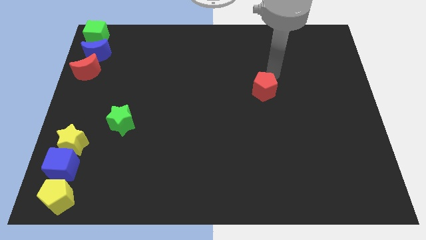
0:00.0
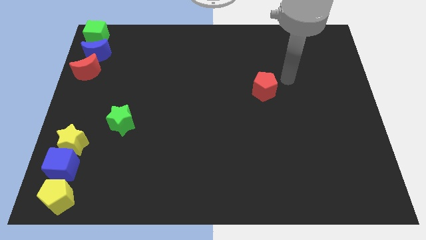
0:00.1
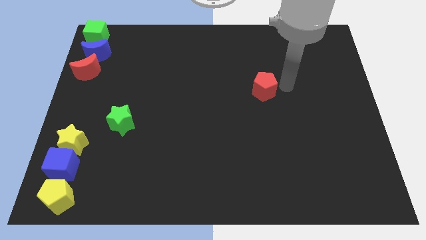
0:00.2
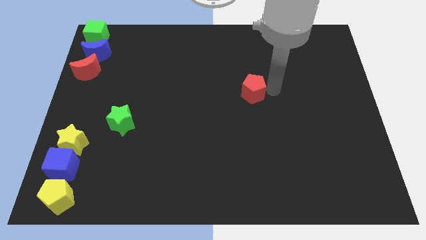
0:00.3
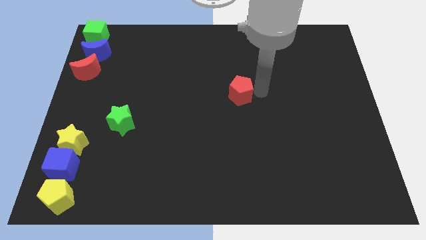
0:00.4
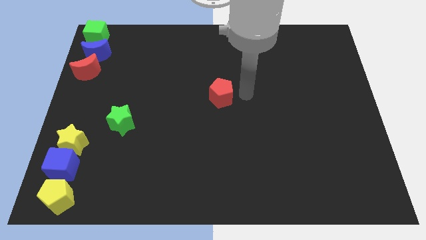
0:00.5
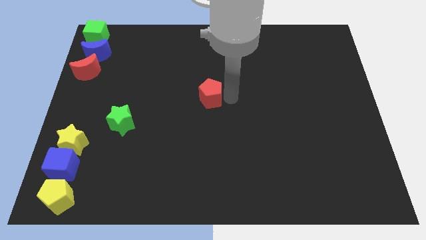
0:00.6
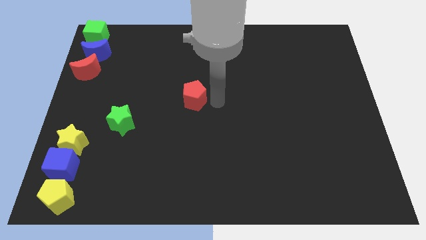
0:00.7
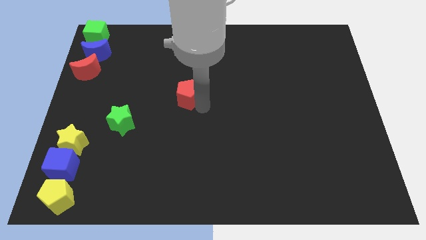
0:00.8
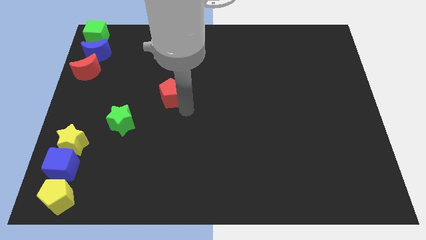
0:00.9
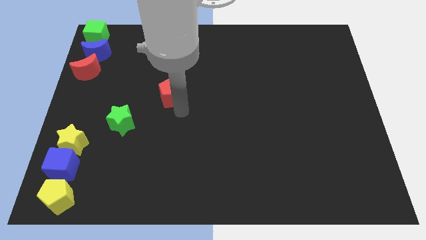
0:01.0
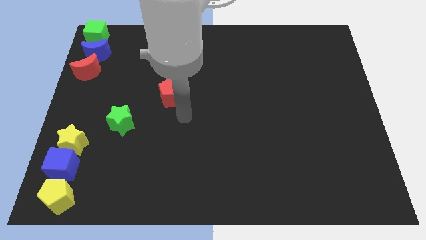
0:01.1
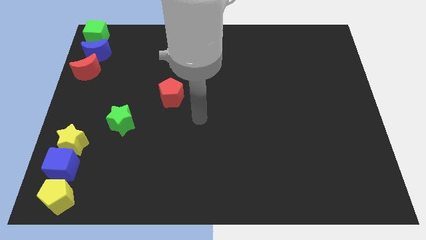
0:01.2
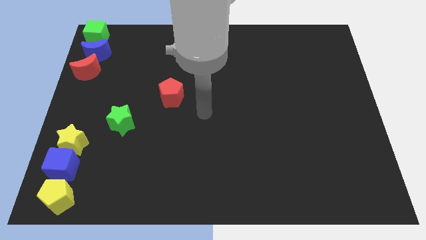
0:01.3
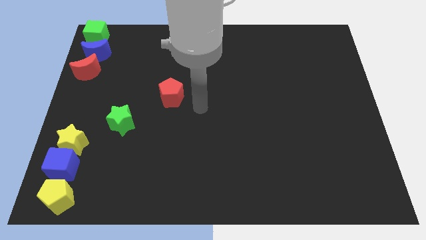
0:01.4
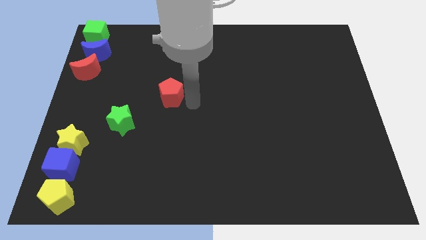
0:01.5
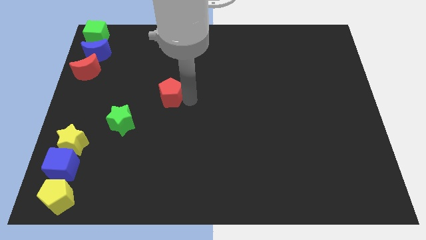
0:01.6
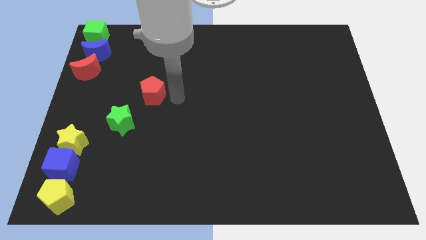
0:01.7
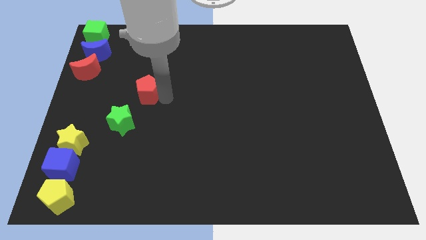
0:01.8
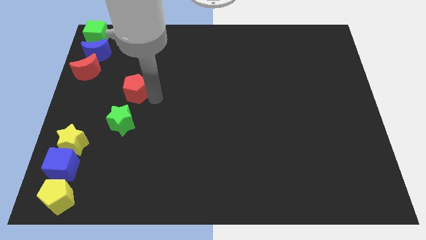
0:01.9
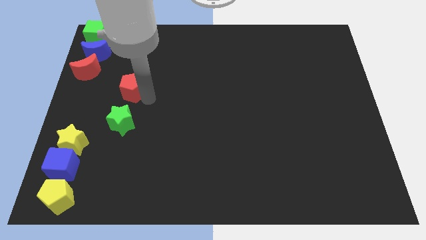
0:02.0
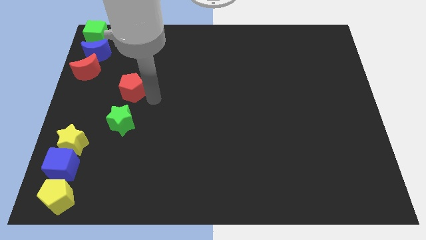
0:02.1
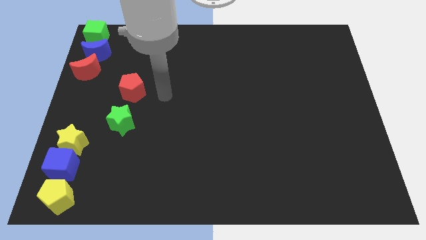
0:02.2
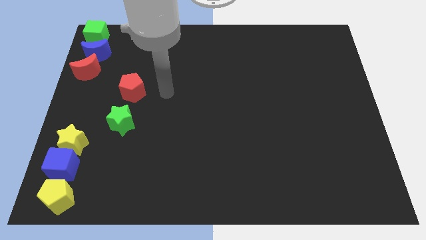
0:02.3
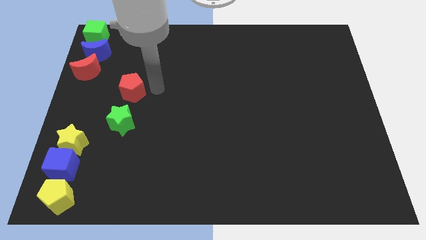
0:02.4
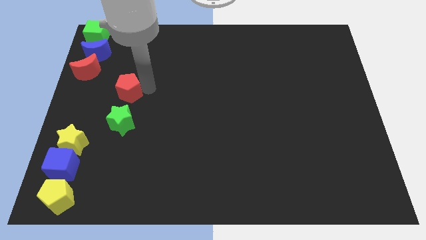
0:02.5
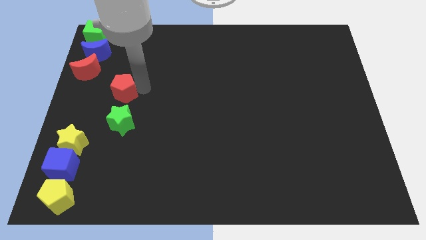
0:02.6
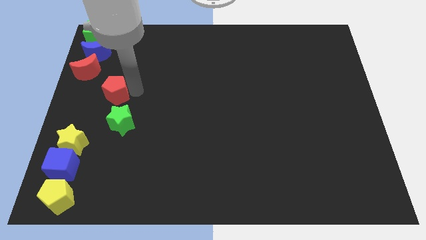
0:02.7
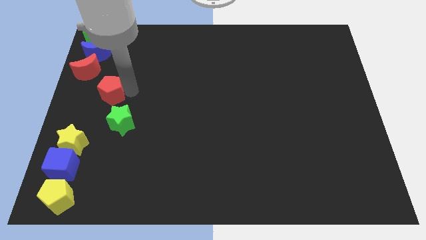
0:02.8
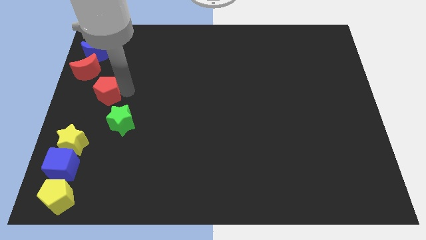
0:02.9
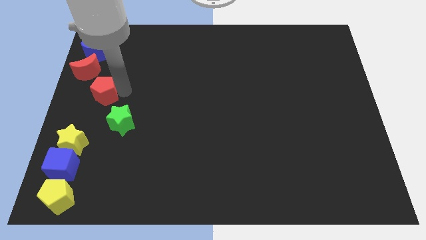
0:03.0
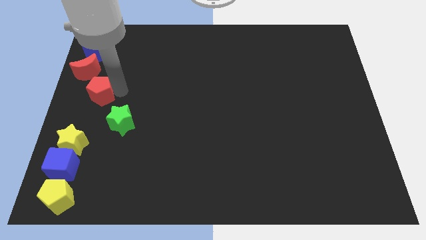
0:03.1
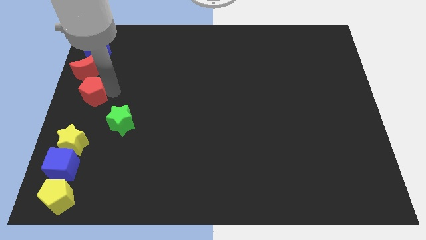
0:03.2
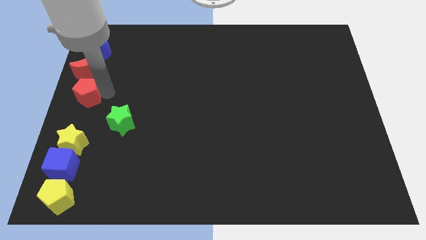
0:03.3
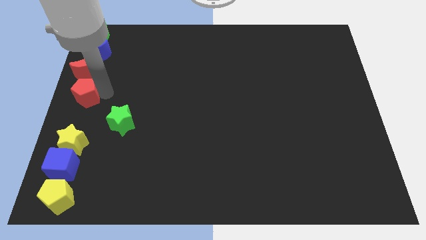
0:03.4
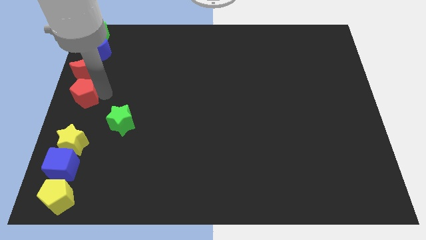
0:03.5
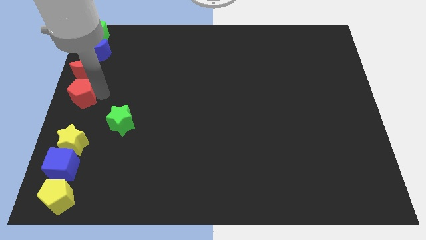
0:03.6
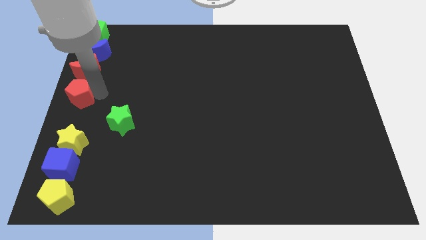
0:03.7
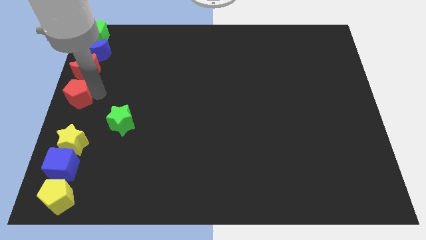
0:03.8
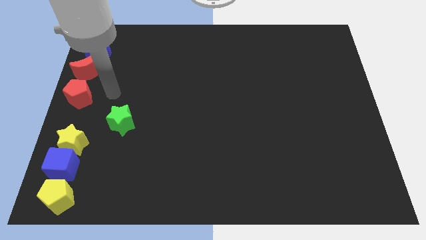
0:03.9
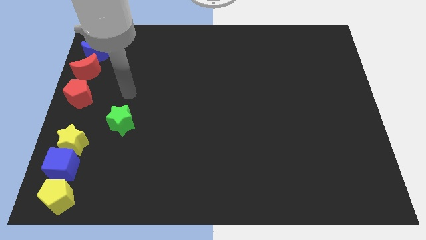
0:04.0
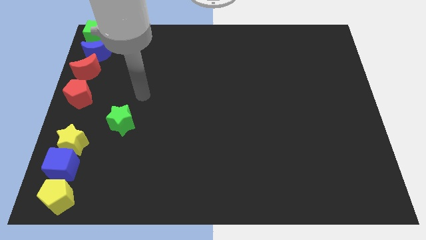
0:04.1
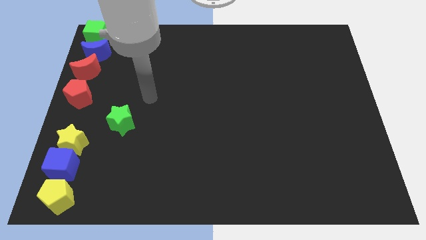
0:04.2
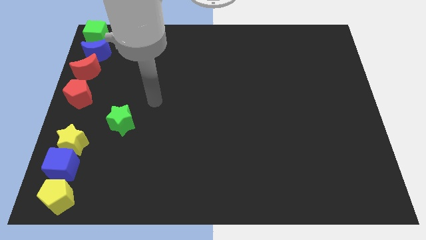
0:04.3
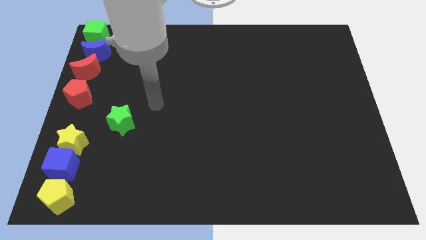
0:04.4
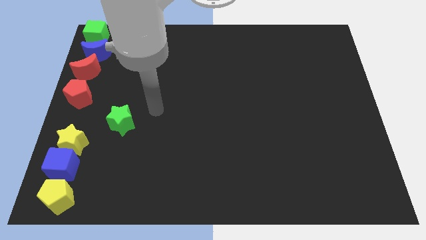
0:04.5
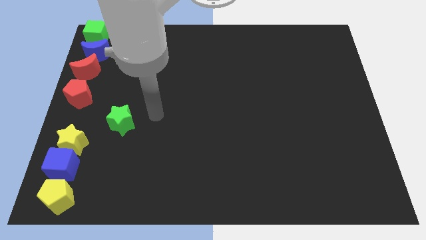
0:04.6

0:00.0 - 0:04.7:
move the red pentagon below the red moon

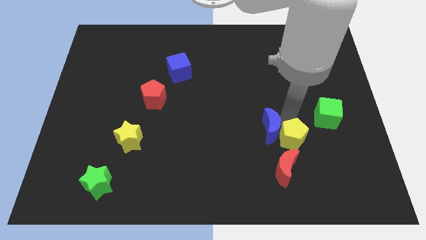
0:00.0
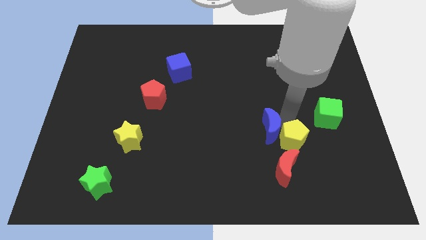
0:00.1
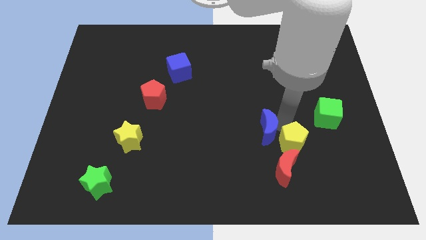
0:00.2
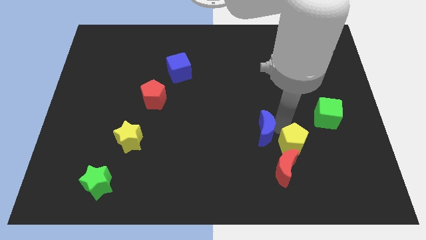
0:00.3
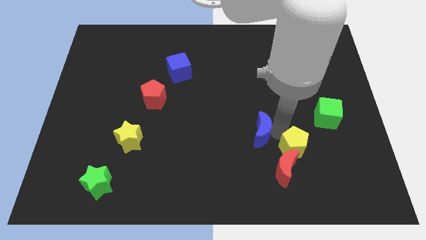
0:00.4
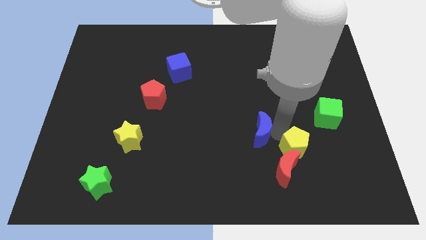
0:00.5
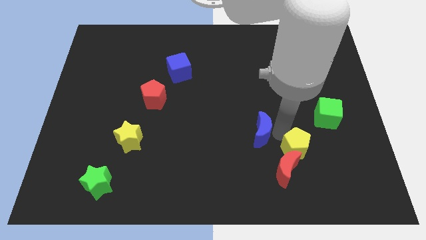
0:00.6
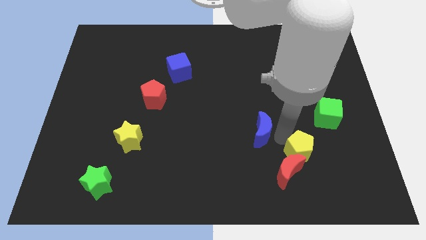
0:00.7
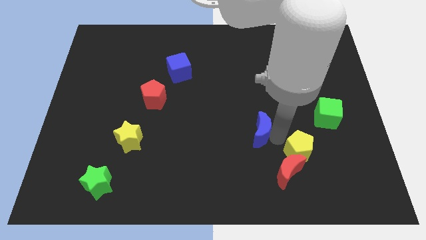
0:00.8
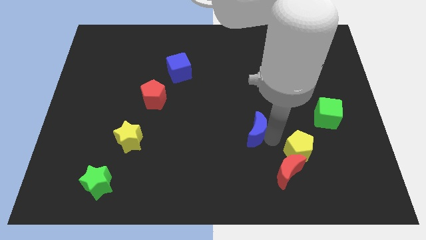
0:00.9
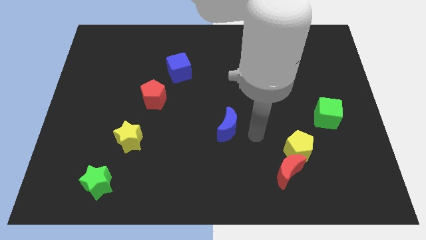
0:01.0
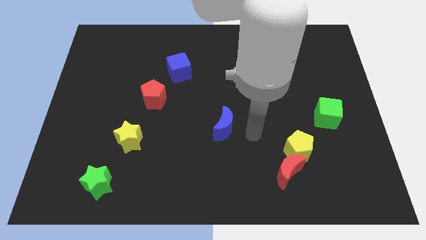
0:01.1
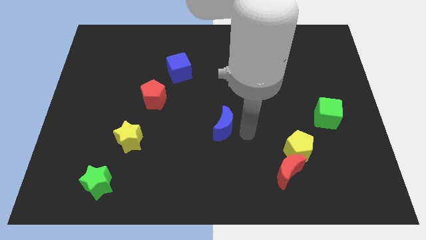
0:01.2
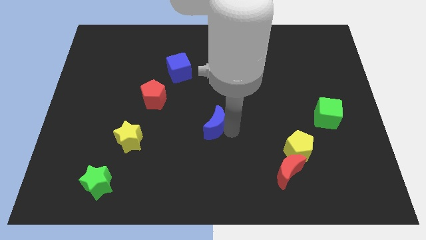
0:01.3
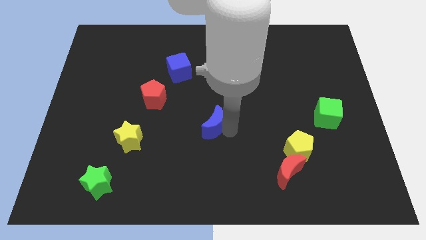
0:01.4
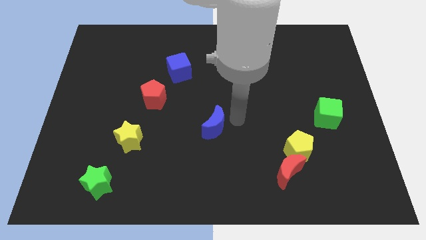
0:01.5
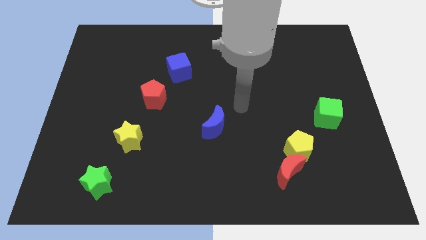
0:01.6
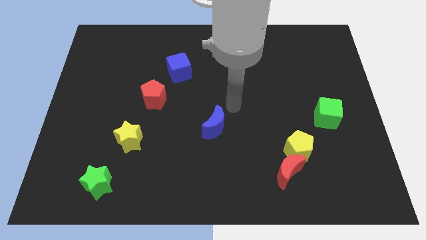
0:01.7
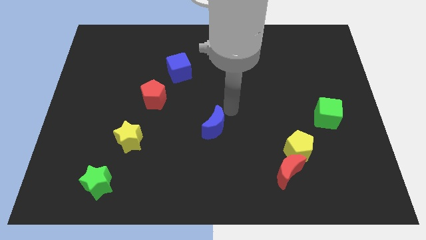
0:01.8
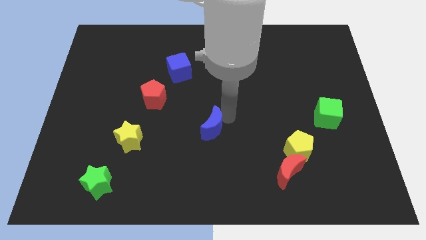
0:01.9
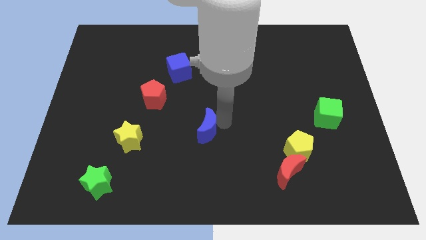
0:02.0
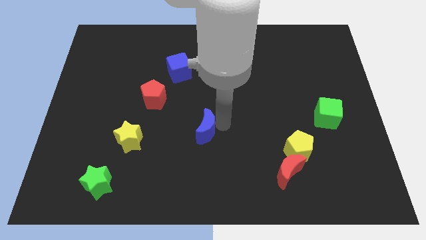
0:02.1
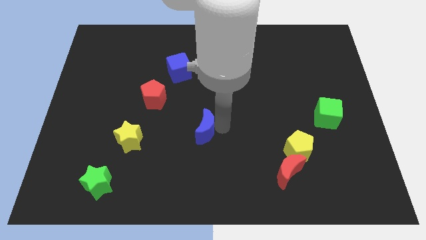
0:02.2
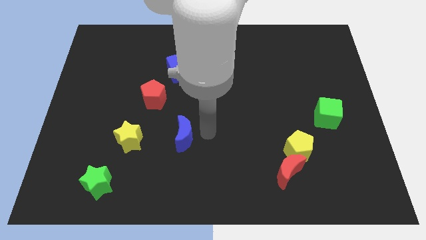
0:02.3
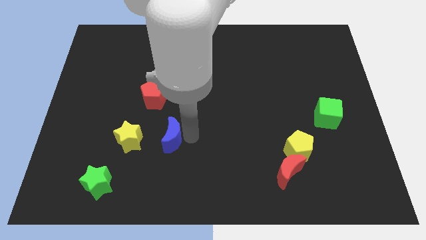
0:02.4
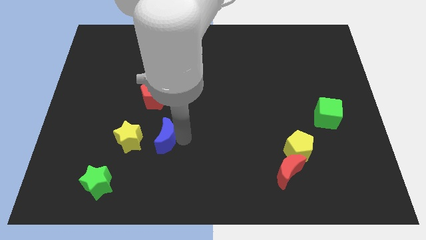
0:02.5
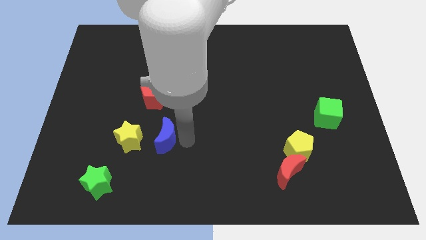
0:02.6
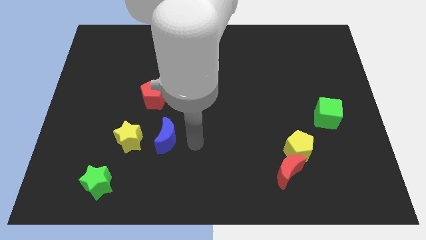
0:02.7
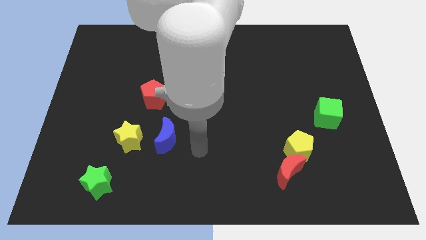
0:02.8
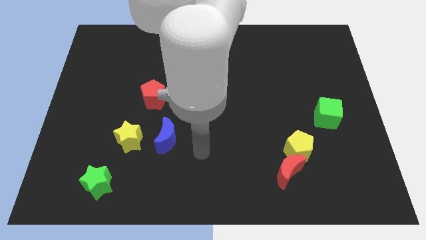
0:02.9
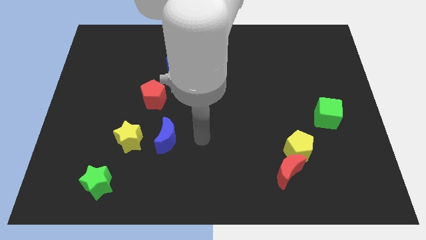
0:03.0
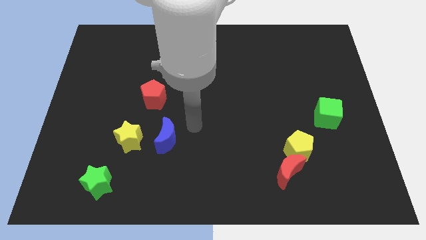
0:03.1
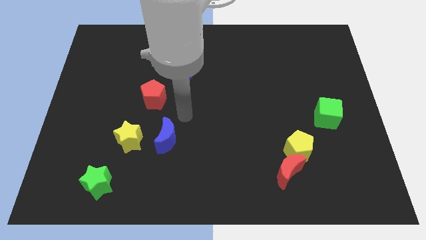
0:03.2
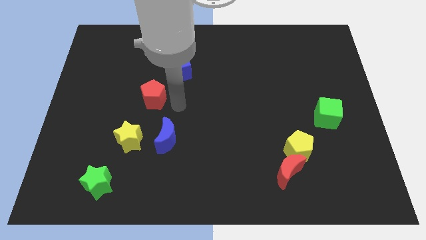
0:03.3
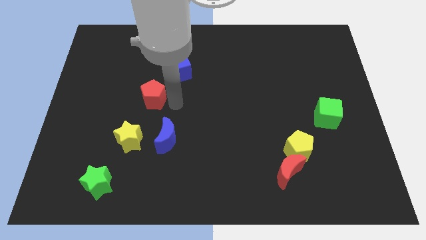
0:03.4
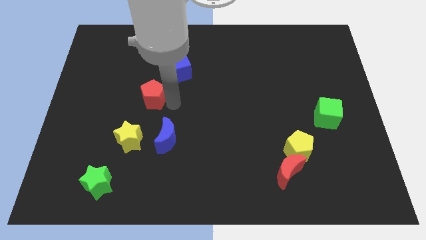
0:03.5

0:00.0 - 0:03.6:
push the blue moon to the right of the yellow star

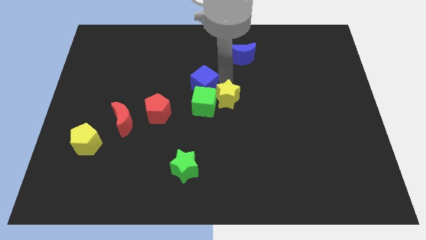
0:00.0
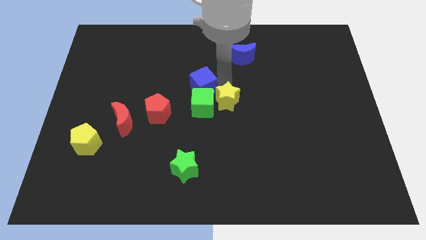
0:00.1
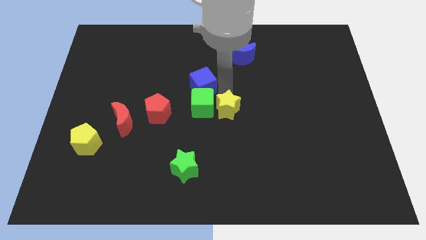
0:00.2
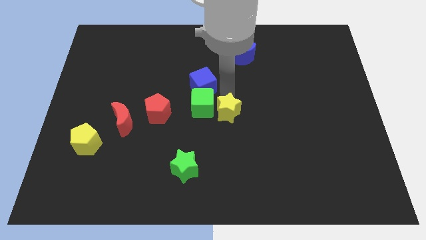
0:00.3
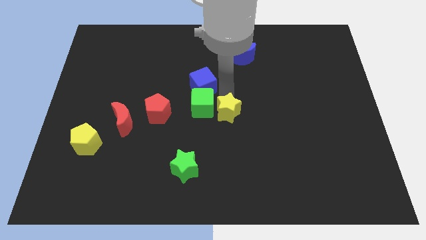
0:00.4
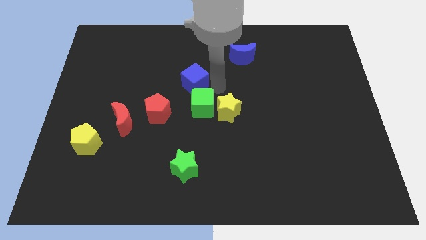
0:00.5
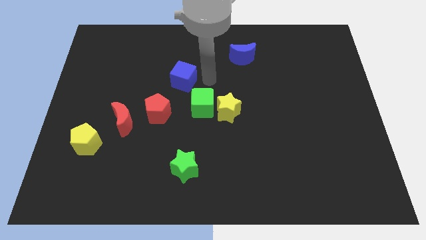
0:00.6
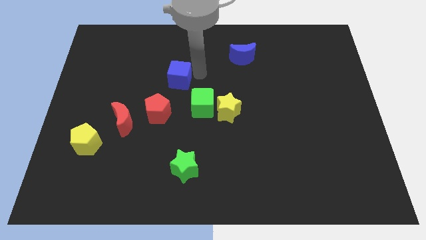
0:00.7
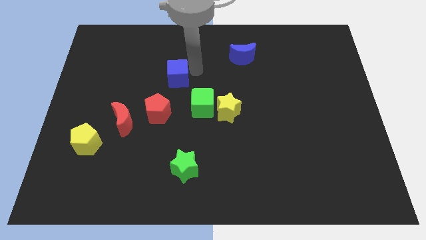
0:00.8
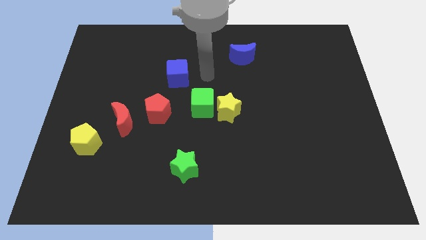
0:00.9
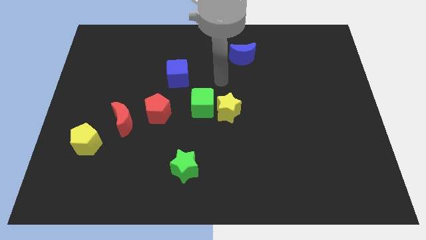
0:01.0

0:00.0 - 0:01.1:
separate the yellow star and blue cube
